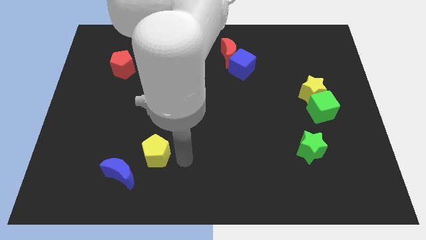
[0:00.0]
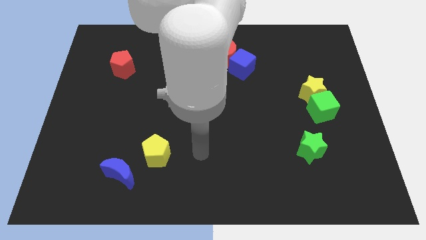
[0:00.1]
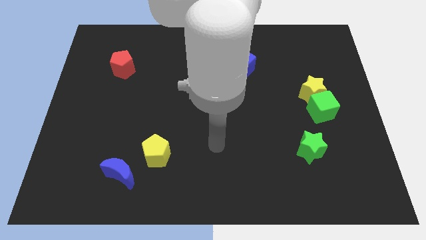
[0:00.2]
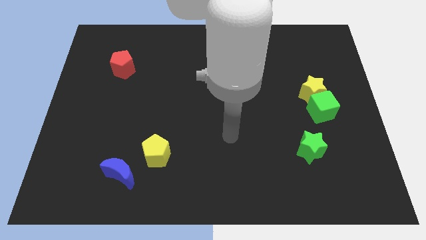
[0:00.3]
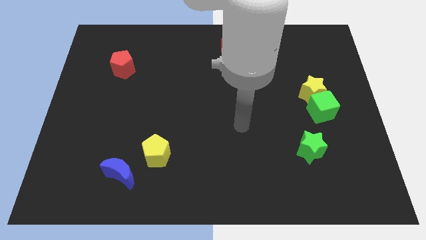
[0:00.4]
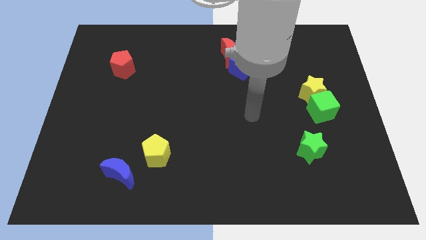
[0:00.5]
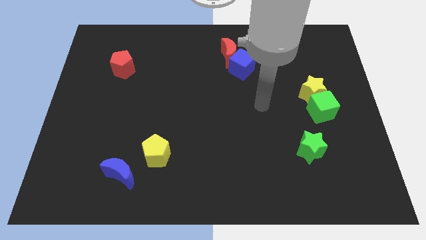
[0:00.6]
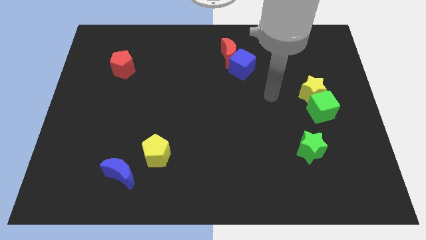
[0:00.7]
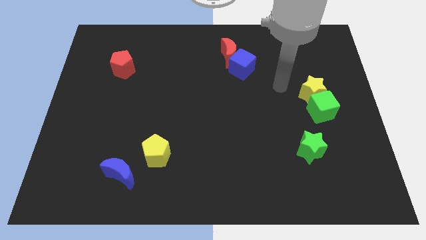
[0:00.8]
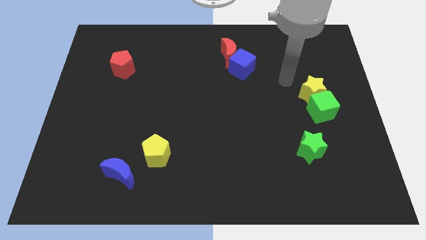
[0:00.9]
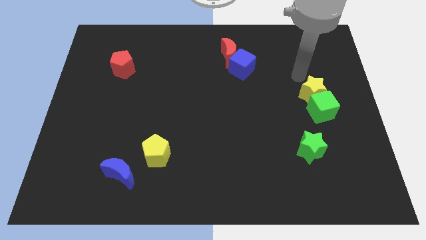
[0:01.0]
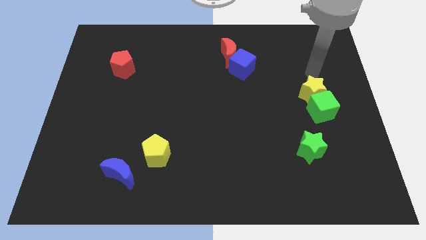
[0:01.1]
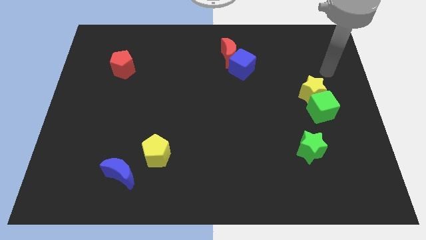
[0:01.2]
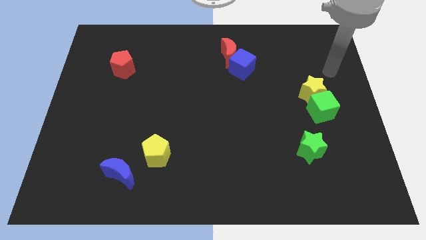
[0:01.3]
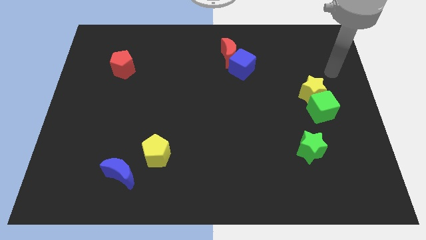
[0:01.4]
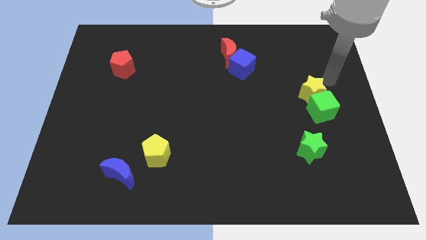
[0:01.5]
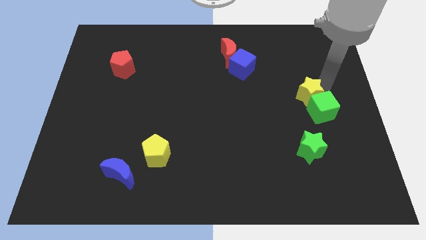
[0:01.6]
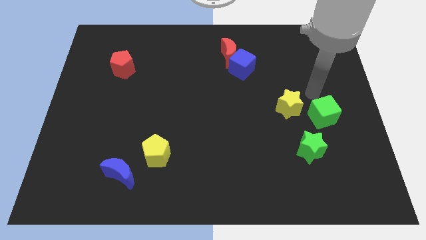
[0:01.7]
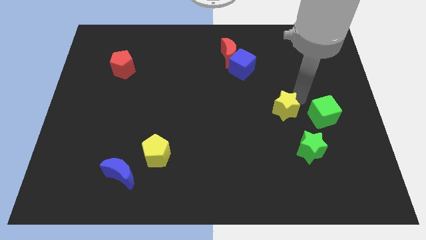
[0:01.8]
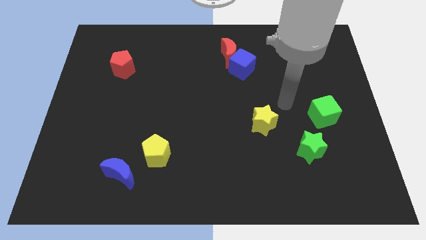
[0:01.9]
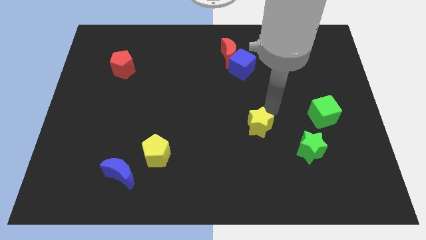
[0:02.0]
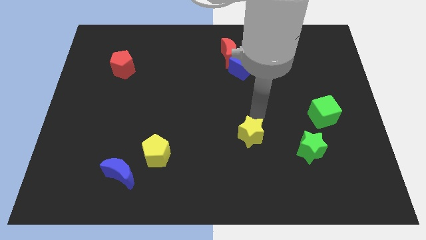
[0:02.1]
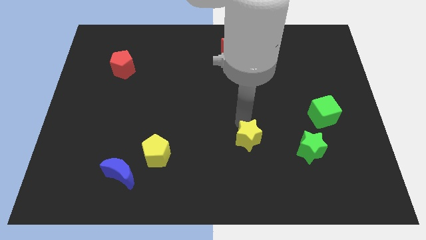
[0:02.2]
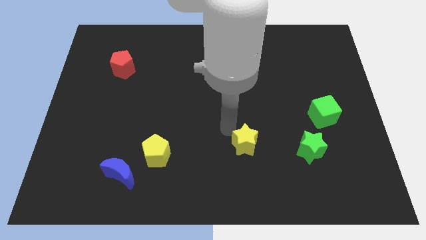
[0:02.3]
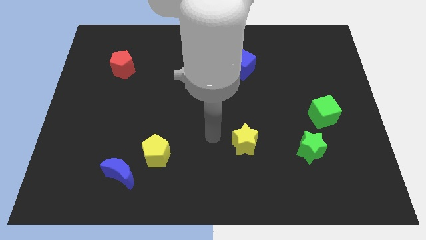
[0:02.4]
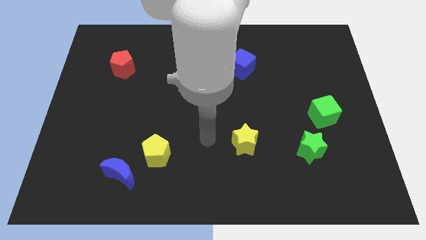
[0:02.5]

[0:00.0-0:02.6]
push the yellow star to the right of the yellow pentagon

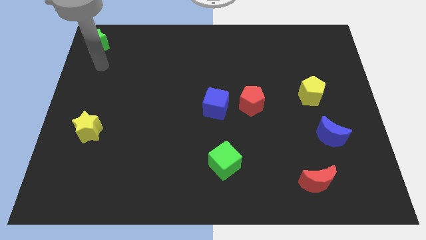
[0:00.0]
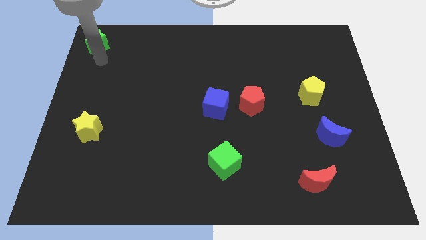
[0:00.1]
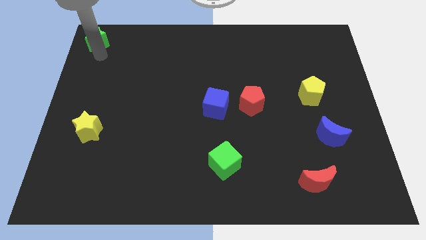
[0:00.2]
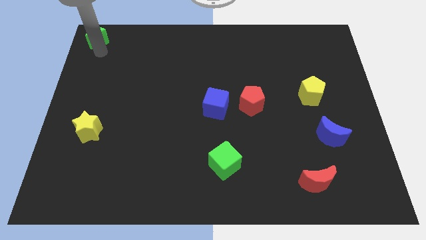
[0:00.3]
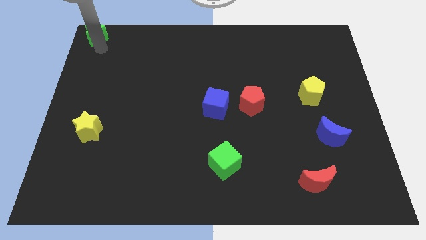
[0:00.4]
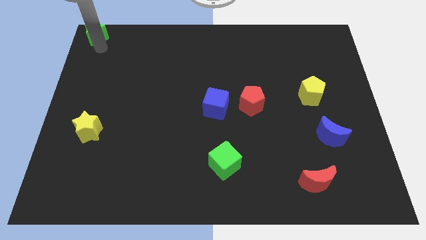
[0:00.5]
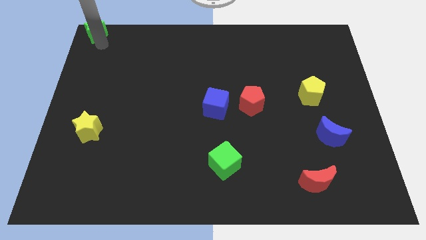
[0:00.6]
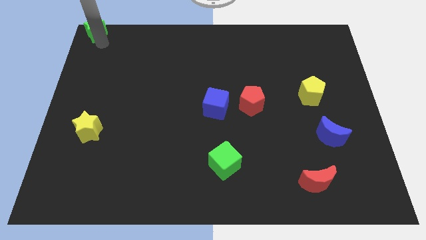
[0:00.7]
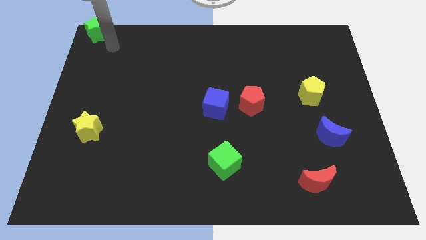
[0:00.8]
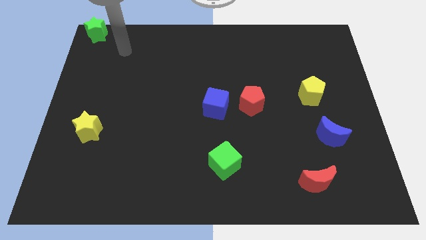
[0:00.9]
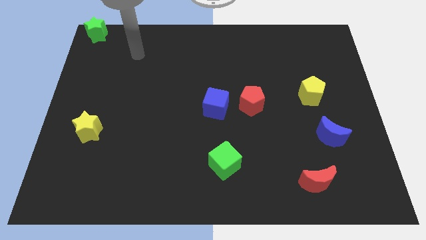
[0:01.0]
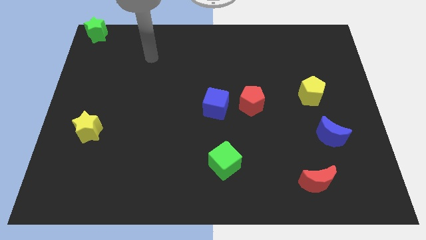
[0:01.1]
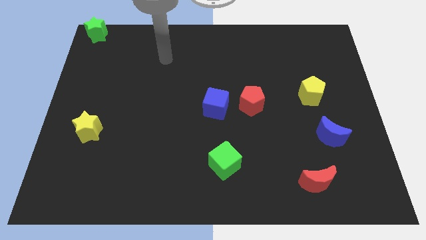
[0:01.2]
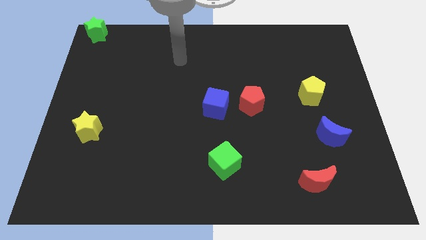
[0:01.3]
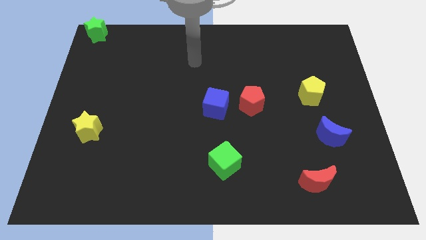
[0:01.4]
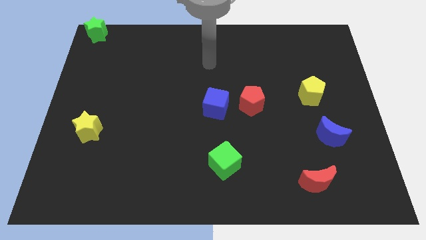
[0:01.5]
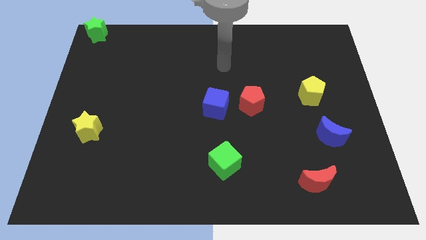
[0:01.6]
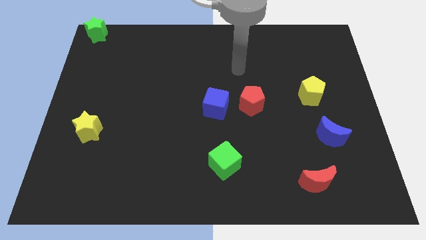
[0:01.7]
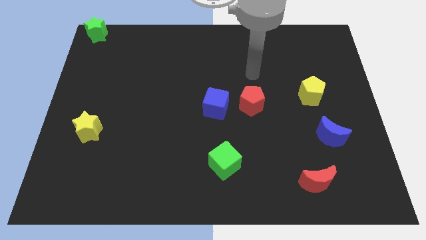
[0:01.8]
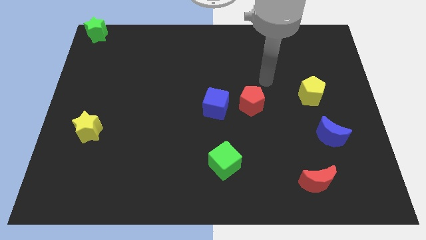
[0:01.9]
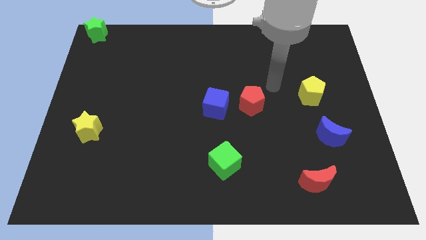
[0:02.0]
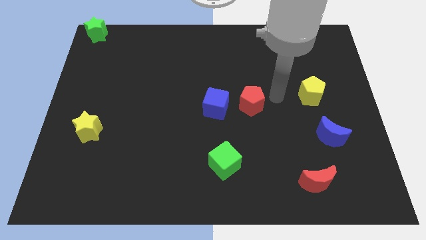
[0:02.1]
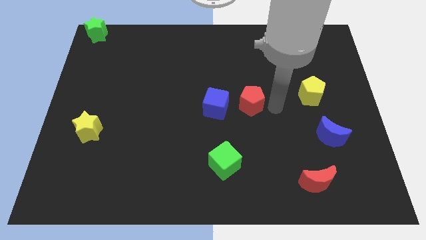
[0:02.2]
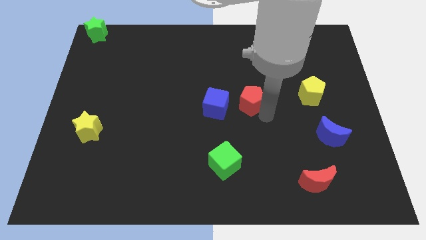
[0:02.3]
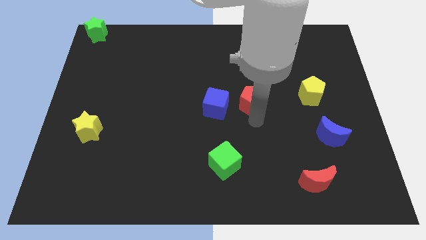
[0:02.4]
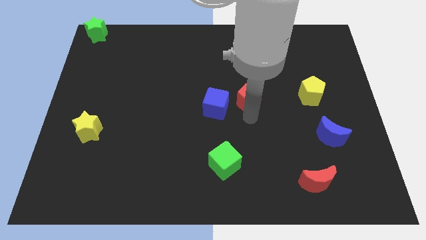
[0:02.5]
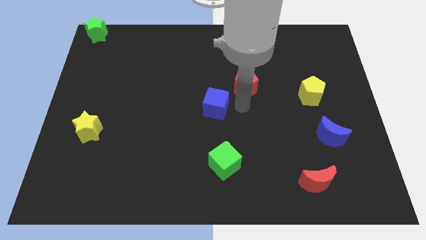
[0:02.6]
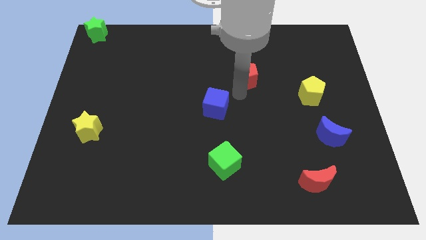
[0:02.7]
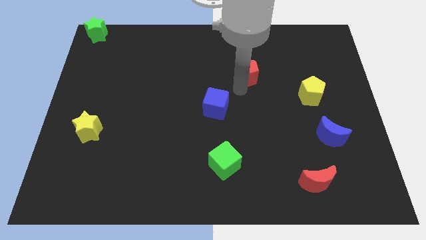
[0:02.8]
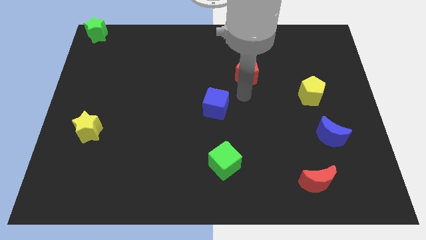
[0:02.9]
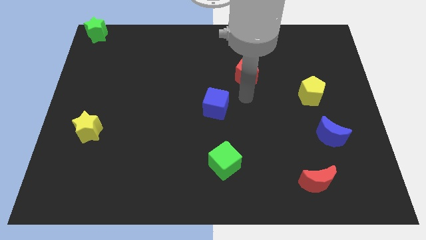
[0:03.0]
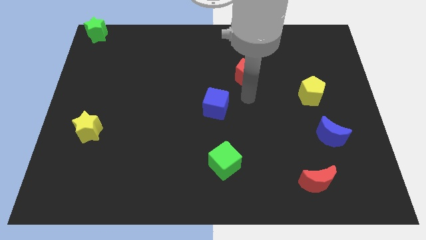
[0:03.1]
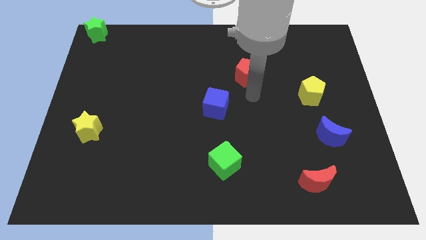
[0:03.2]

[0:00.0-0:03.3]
push red pentagon slightly up

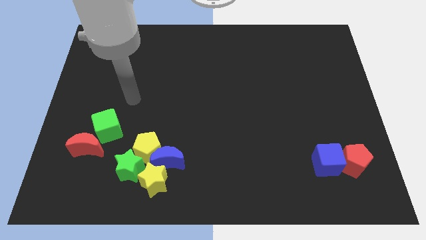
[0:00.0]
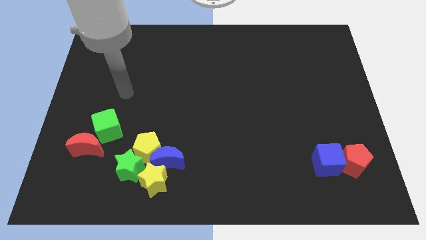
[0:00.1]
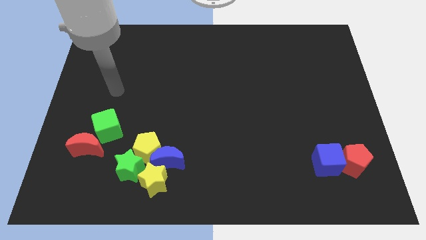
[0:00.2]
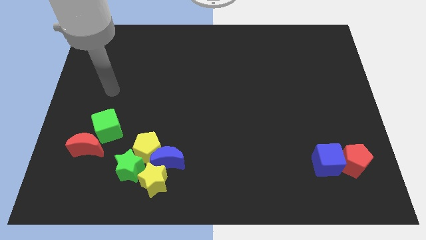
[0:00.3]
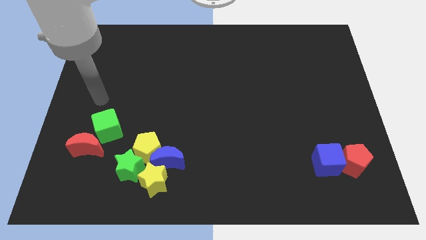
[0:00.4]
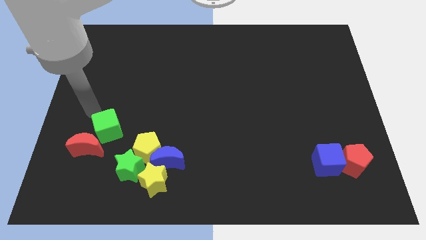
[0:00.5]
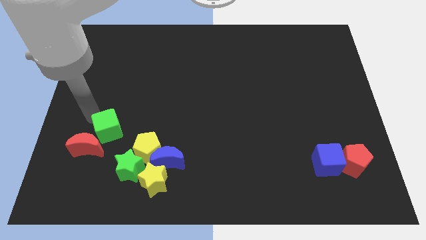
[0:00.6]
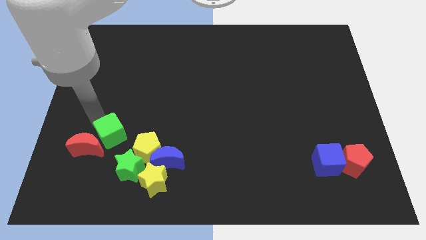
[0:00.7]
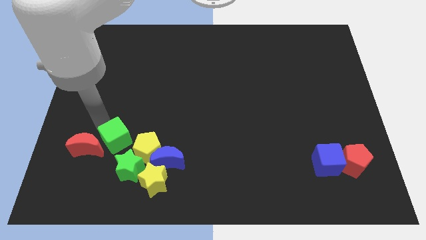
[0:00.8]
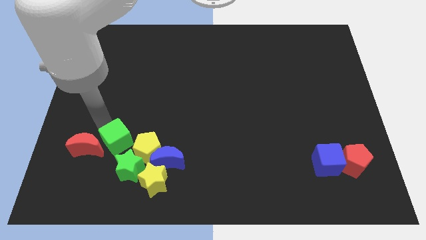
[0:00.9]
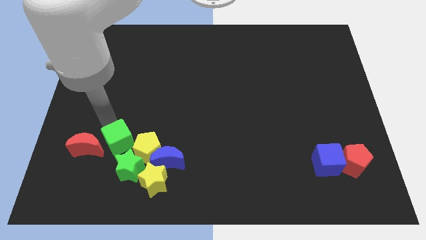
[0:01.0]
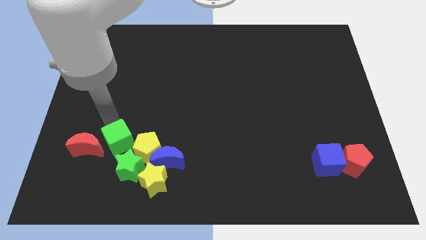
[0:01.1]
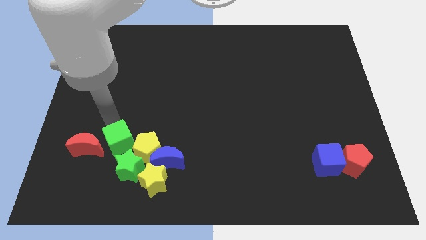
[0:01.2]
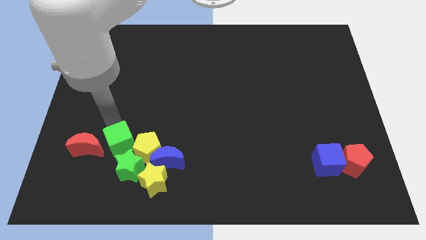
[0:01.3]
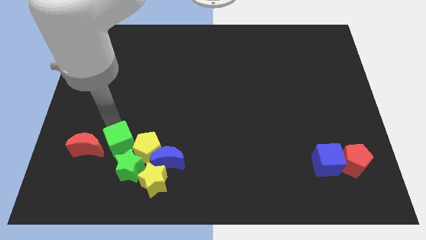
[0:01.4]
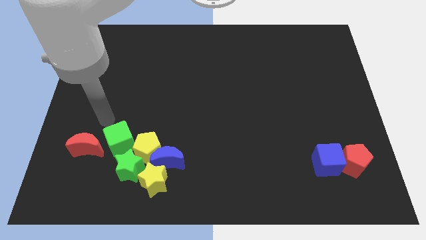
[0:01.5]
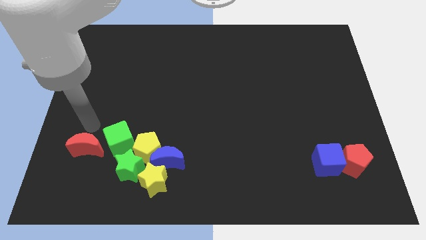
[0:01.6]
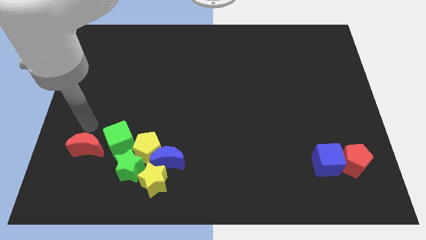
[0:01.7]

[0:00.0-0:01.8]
move the green cube into the green star

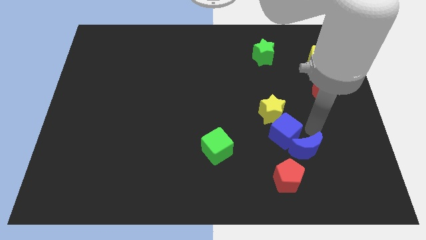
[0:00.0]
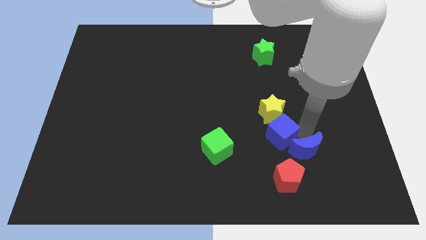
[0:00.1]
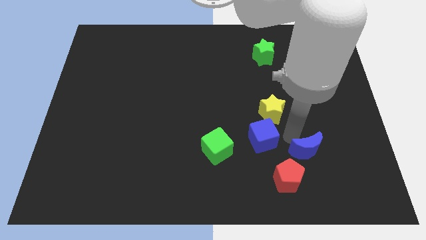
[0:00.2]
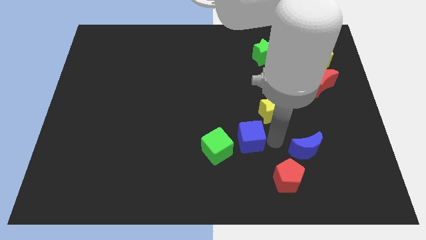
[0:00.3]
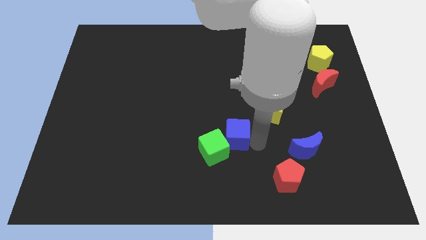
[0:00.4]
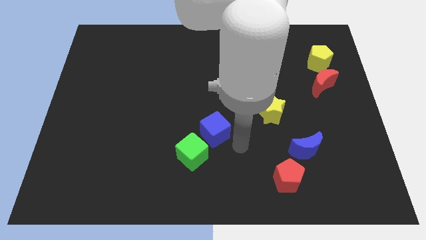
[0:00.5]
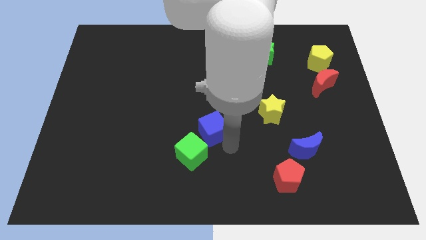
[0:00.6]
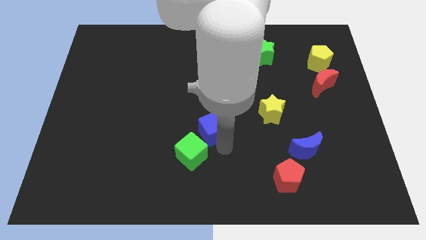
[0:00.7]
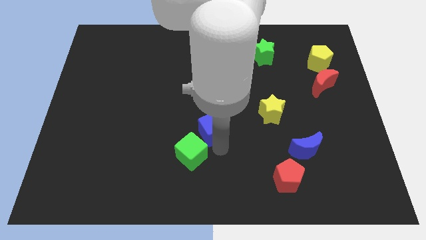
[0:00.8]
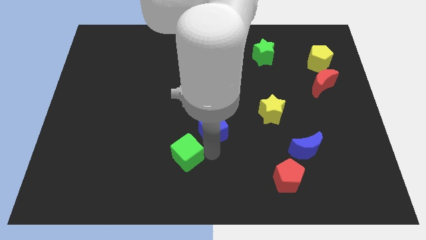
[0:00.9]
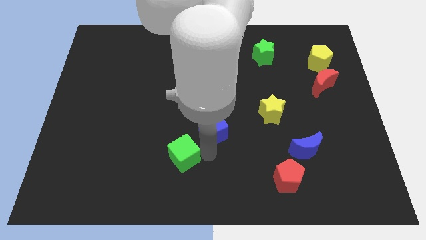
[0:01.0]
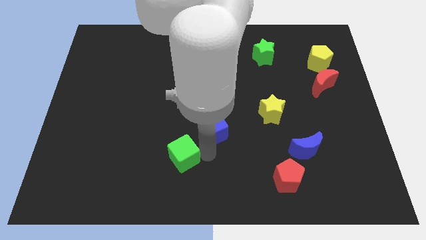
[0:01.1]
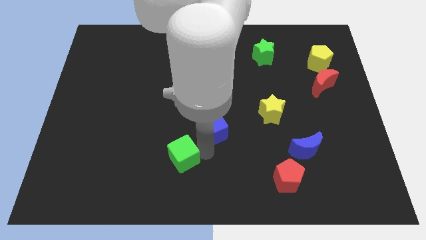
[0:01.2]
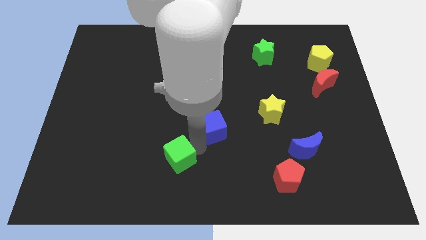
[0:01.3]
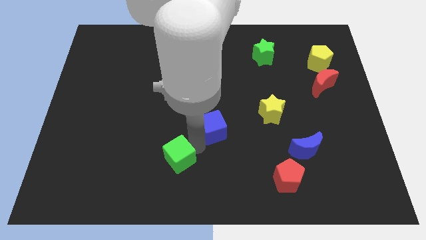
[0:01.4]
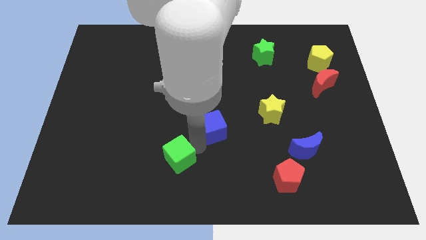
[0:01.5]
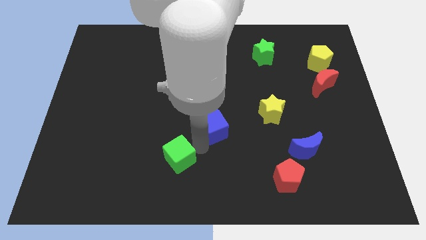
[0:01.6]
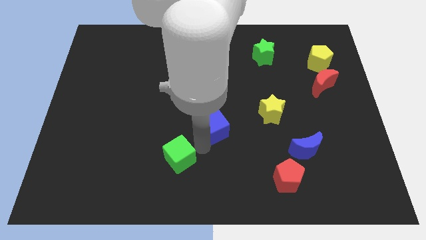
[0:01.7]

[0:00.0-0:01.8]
place the blue cube diagonally to the green cube
